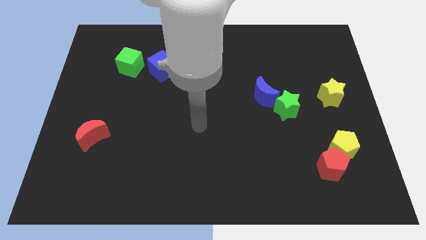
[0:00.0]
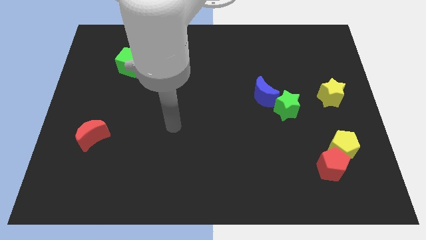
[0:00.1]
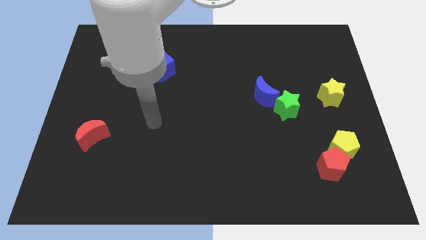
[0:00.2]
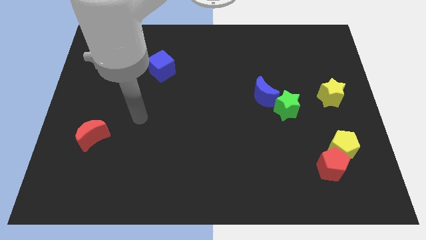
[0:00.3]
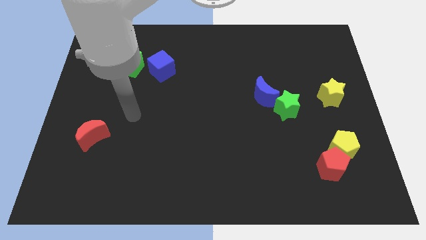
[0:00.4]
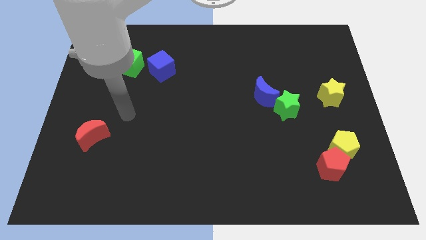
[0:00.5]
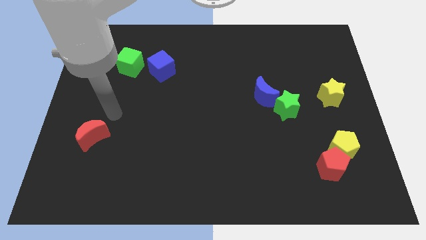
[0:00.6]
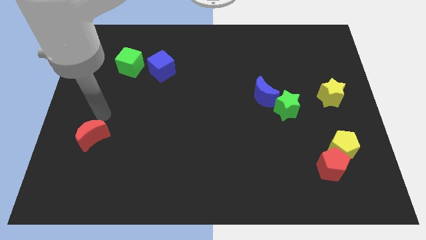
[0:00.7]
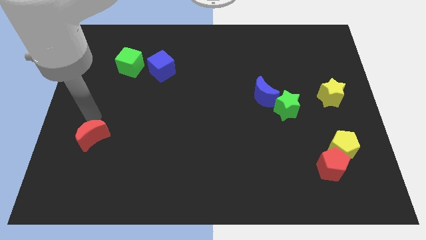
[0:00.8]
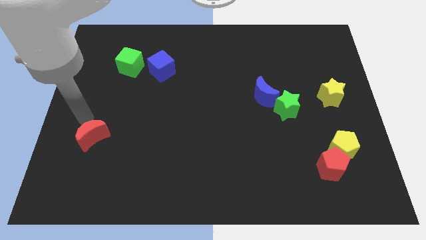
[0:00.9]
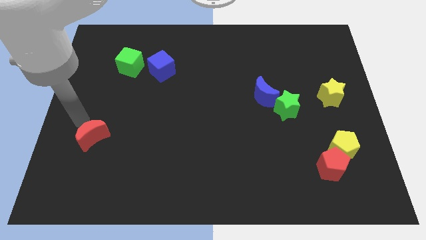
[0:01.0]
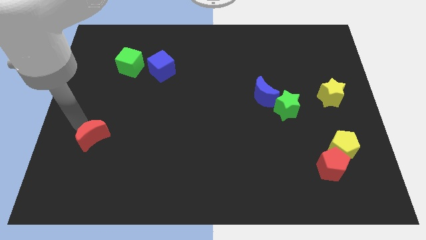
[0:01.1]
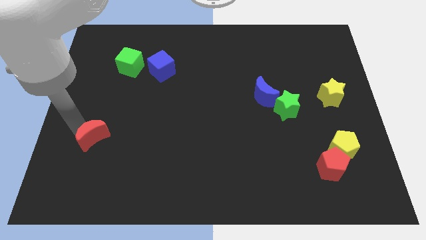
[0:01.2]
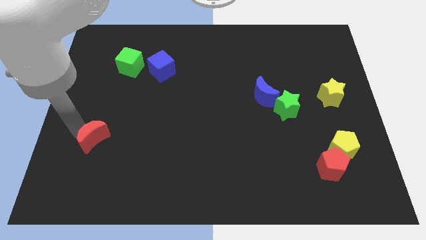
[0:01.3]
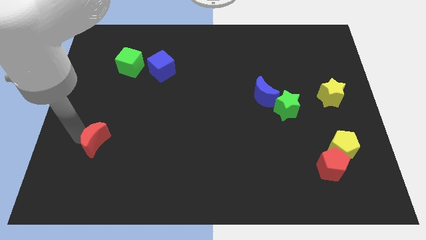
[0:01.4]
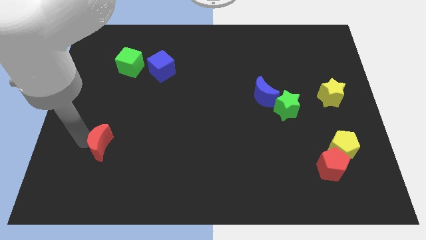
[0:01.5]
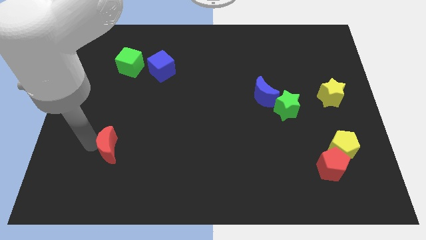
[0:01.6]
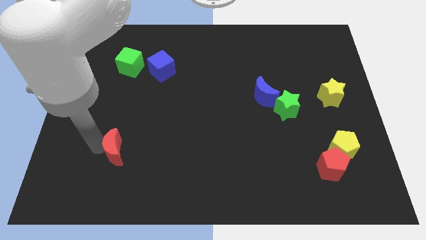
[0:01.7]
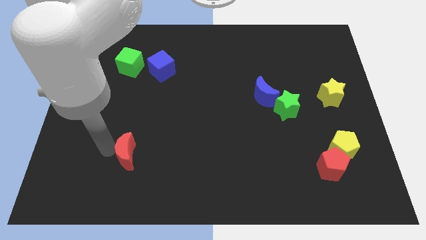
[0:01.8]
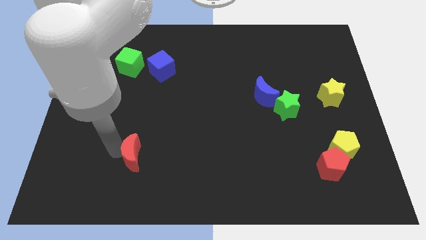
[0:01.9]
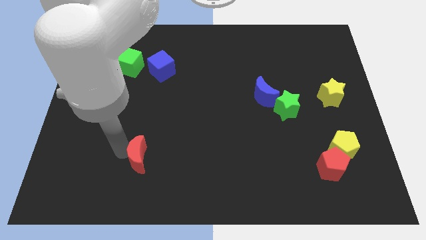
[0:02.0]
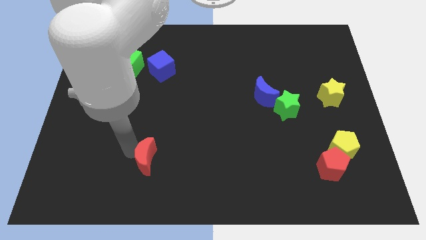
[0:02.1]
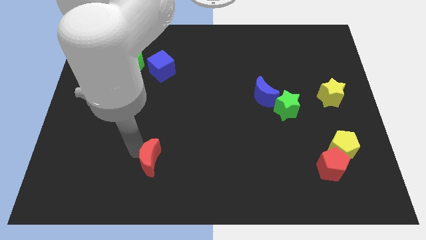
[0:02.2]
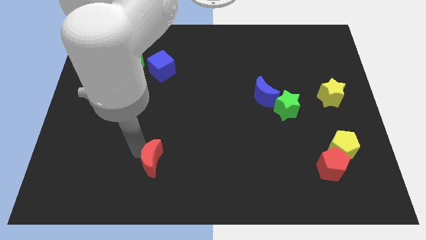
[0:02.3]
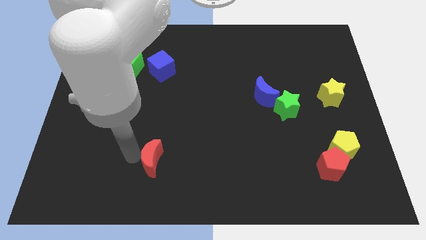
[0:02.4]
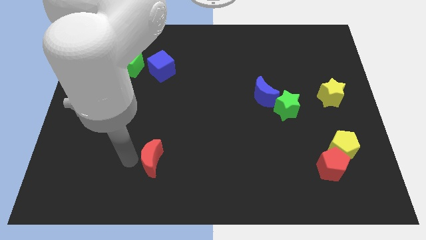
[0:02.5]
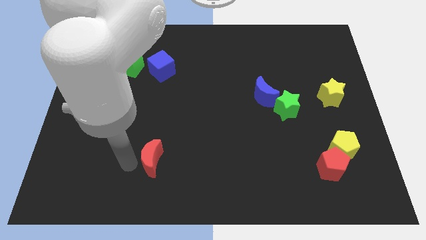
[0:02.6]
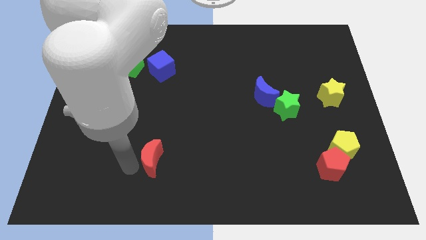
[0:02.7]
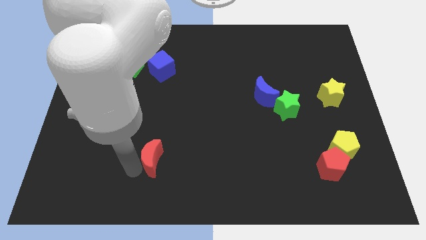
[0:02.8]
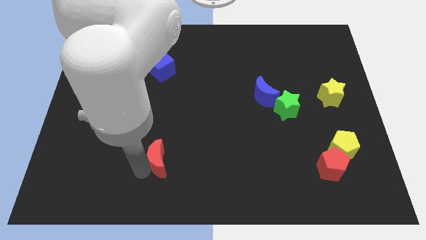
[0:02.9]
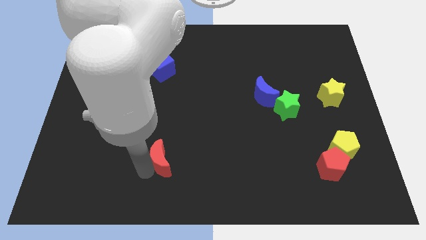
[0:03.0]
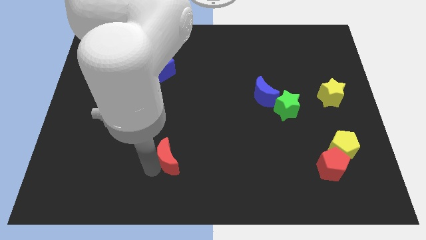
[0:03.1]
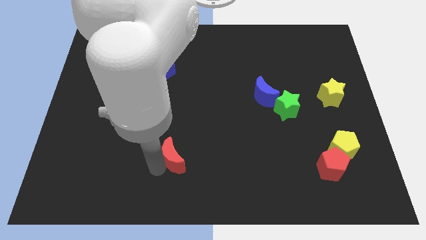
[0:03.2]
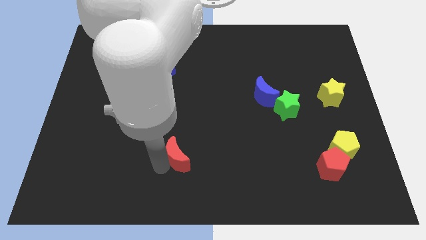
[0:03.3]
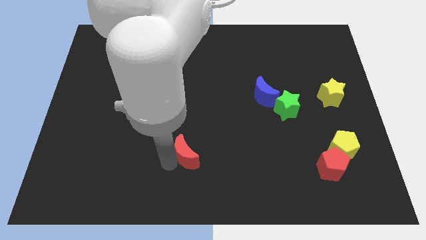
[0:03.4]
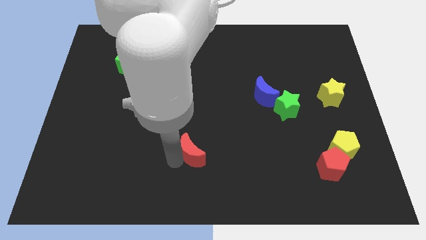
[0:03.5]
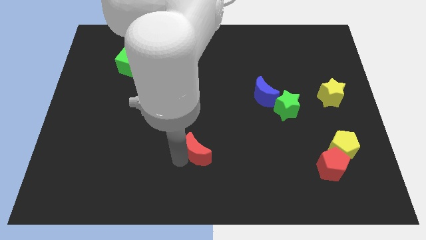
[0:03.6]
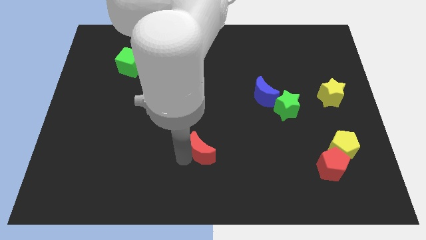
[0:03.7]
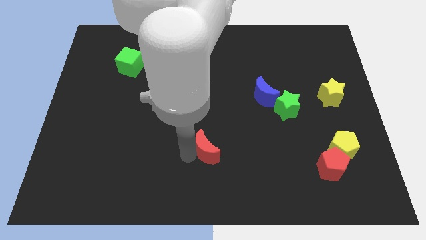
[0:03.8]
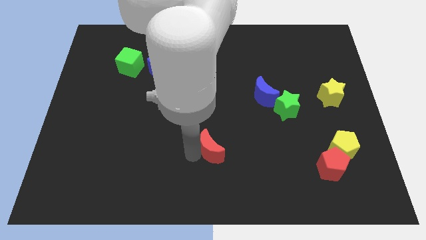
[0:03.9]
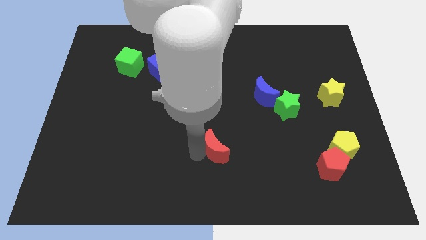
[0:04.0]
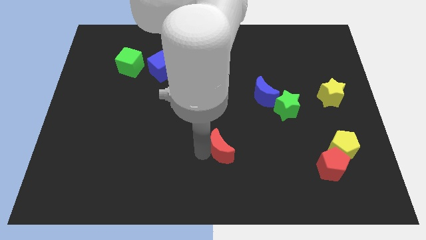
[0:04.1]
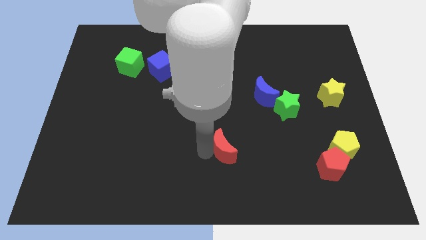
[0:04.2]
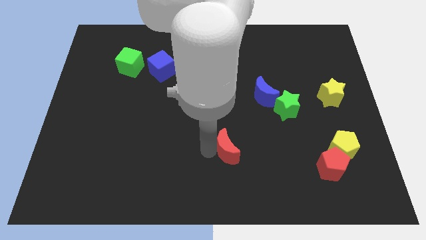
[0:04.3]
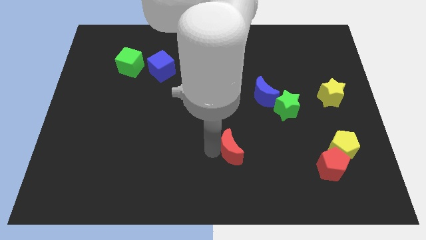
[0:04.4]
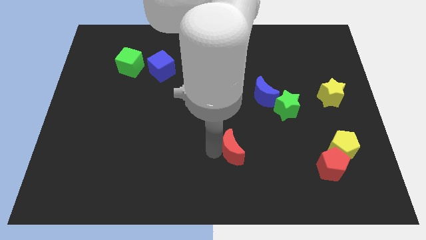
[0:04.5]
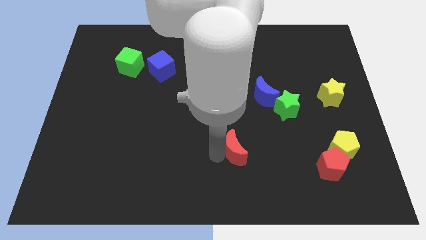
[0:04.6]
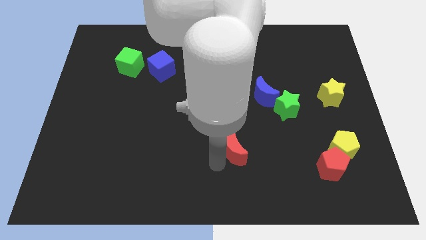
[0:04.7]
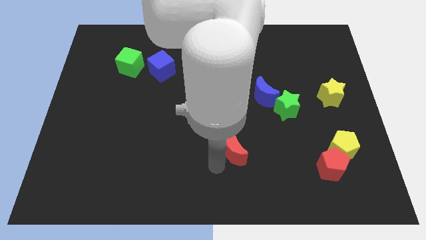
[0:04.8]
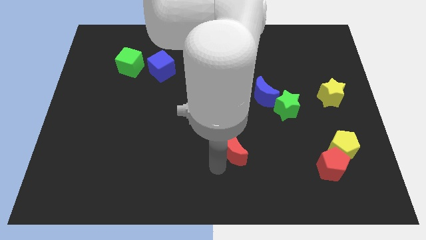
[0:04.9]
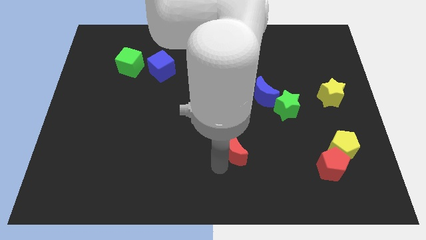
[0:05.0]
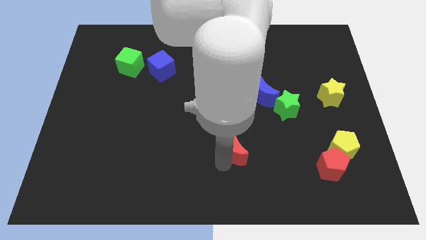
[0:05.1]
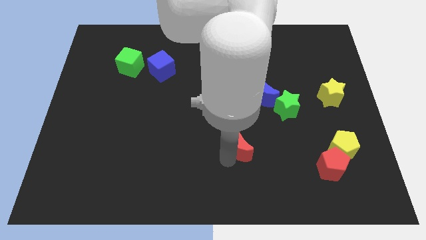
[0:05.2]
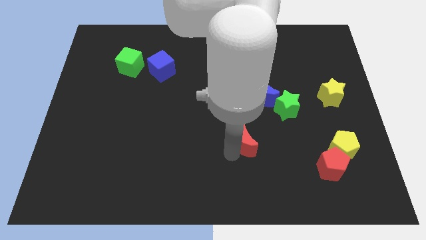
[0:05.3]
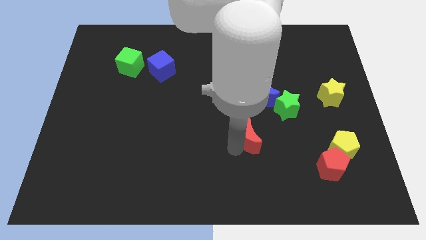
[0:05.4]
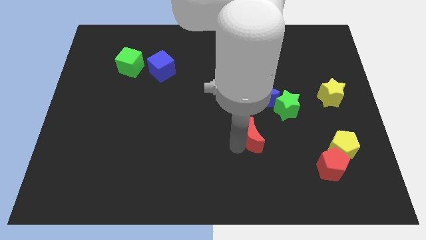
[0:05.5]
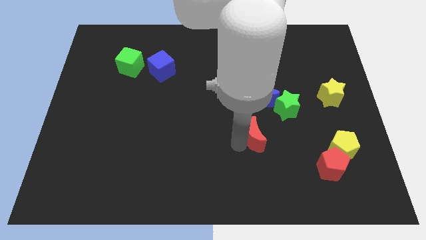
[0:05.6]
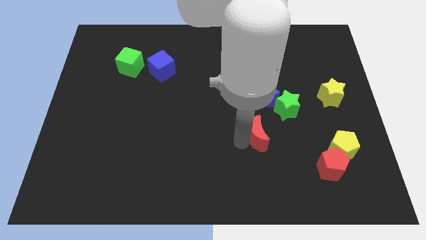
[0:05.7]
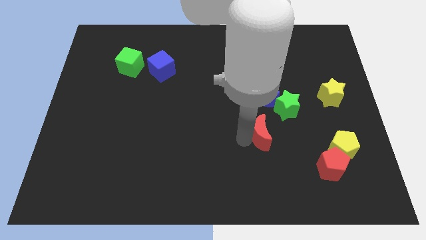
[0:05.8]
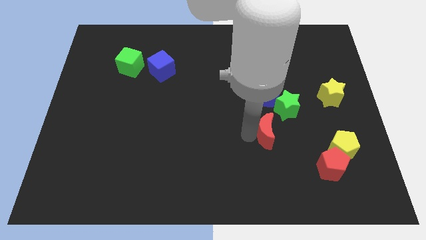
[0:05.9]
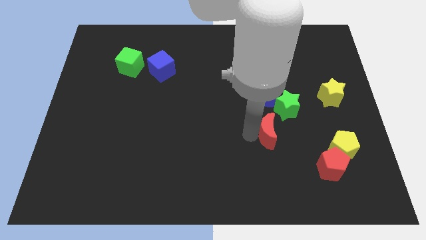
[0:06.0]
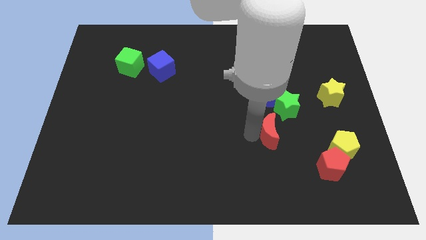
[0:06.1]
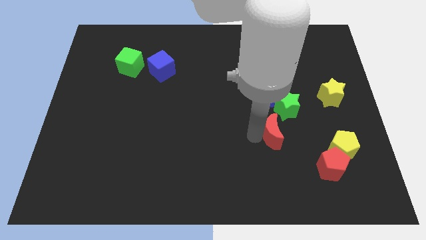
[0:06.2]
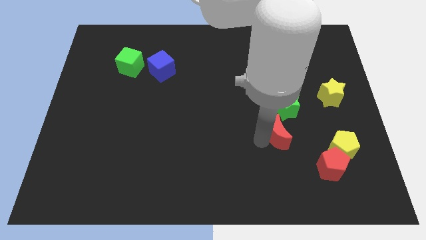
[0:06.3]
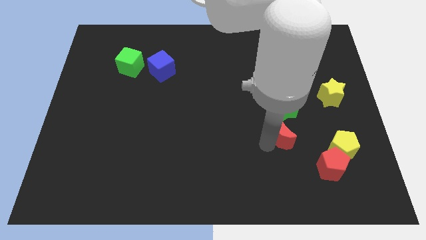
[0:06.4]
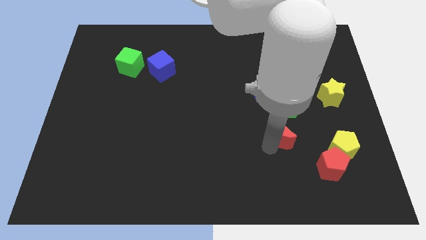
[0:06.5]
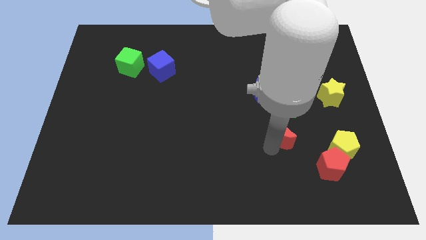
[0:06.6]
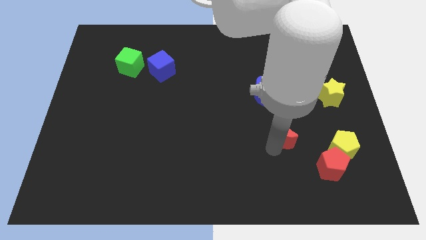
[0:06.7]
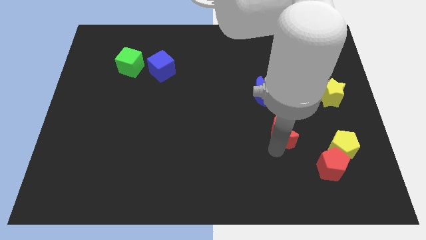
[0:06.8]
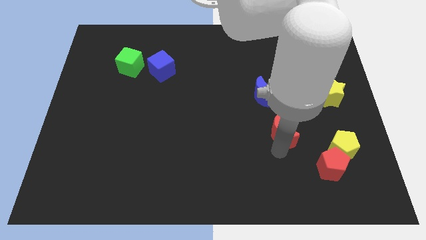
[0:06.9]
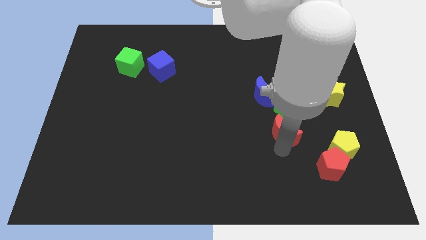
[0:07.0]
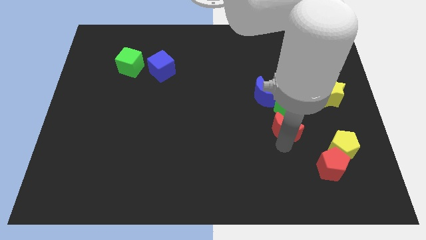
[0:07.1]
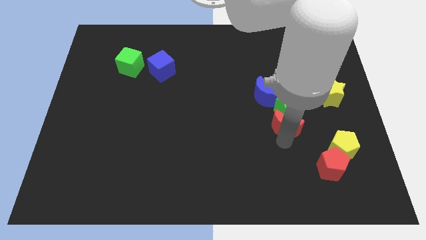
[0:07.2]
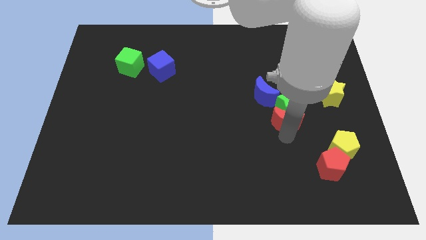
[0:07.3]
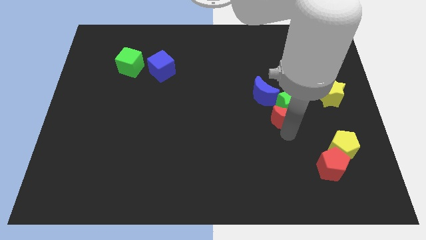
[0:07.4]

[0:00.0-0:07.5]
put the red moon towards the green star

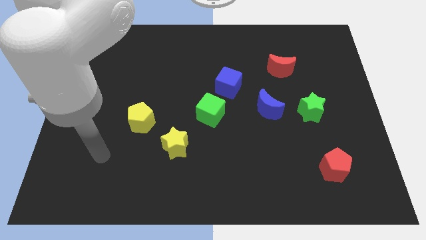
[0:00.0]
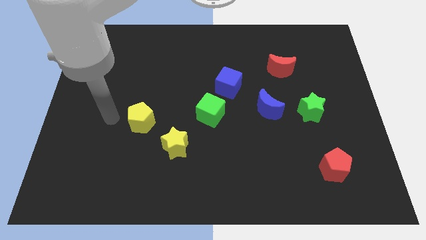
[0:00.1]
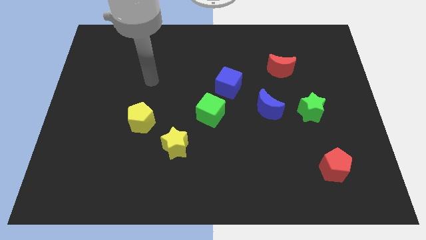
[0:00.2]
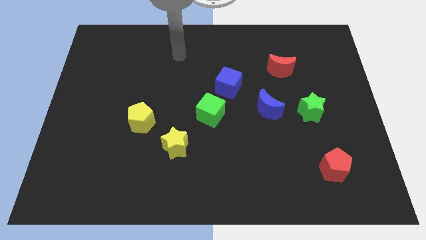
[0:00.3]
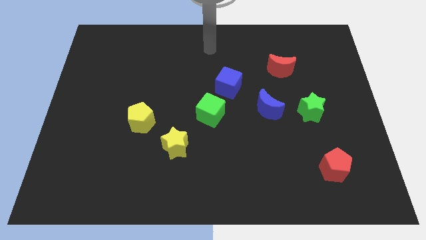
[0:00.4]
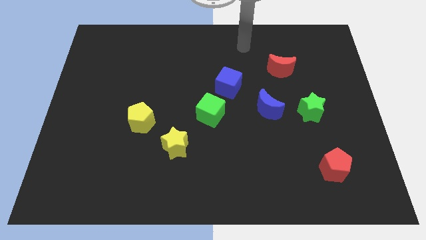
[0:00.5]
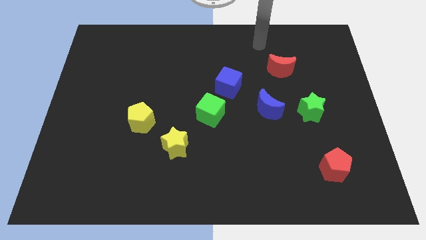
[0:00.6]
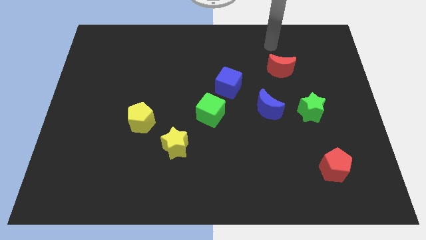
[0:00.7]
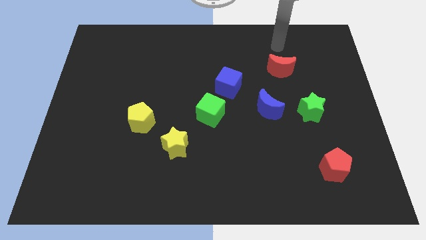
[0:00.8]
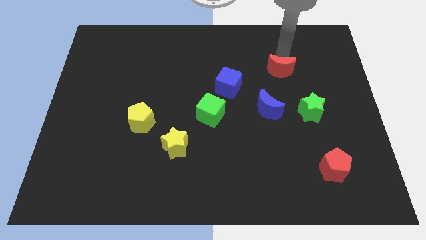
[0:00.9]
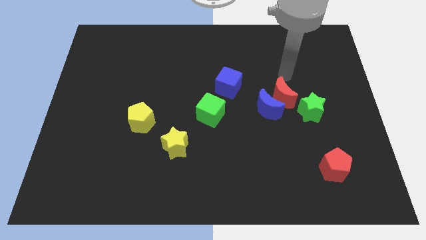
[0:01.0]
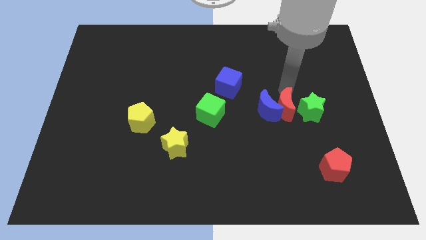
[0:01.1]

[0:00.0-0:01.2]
put the red moon to the blue moon
